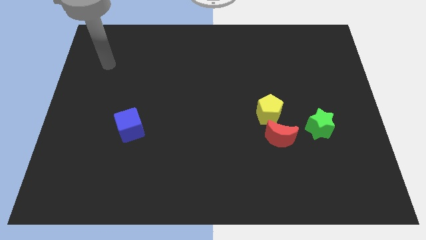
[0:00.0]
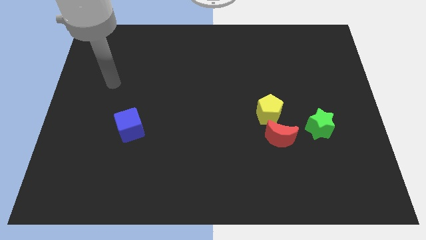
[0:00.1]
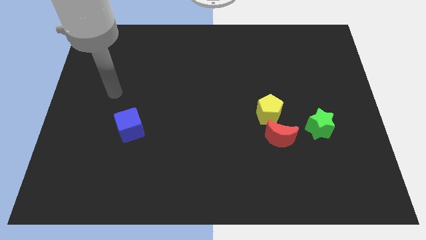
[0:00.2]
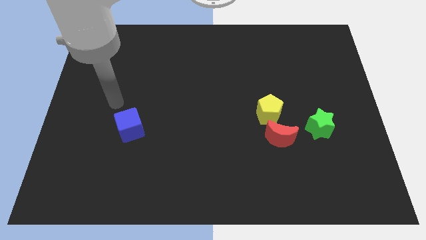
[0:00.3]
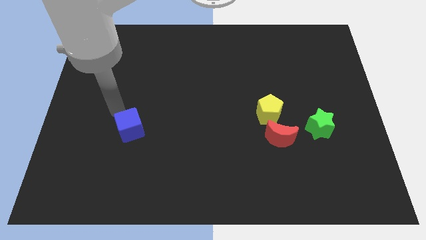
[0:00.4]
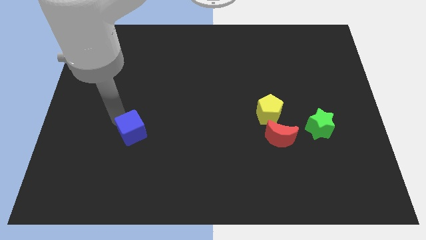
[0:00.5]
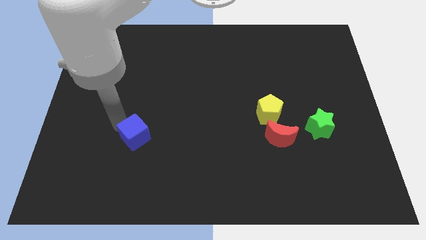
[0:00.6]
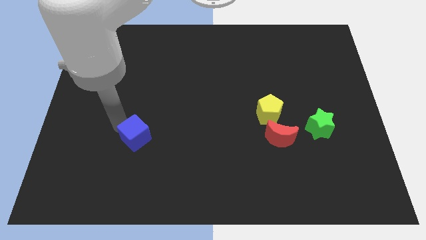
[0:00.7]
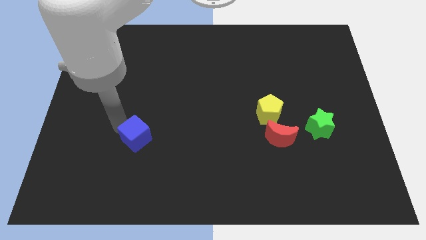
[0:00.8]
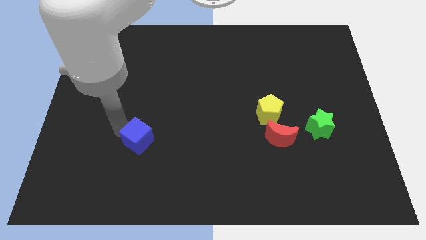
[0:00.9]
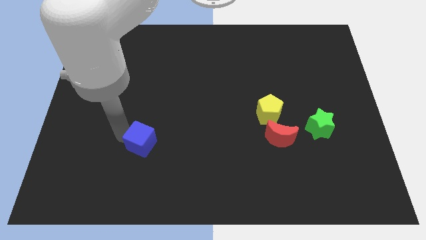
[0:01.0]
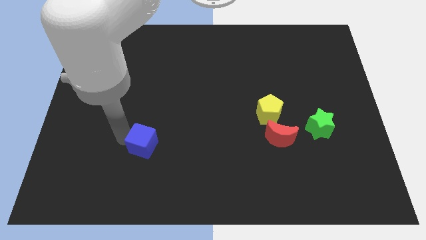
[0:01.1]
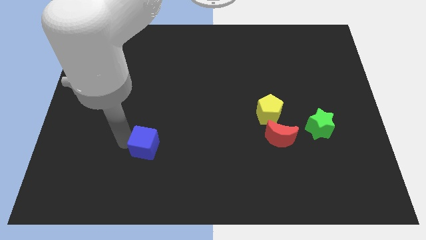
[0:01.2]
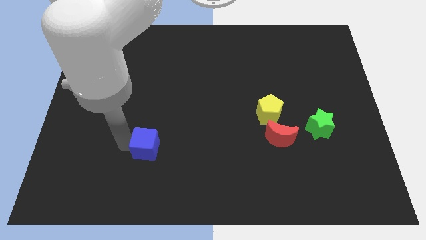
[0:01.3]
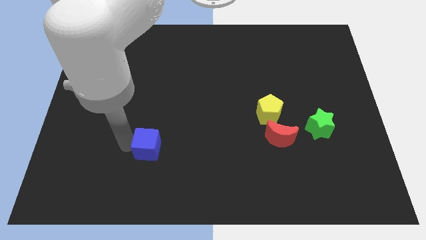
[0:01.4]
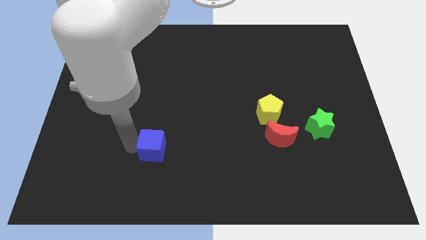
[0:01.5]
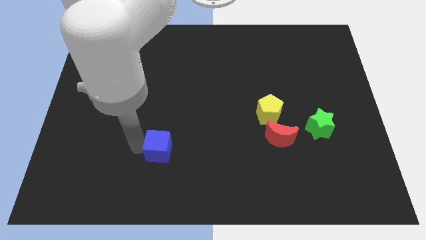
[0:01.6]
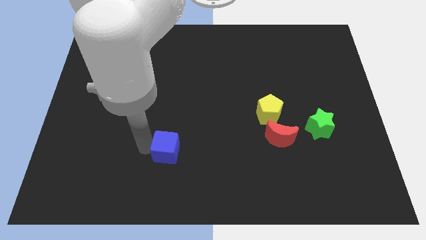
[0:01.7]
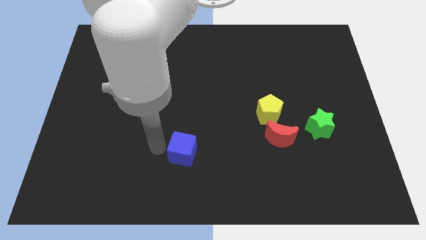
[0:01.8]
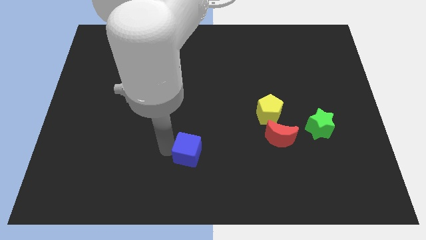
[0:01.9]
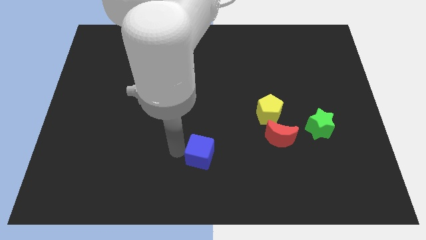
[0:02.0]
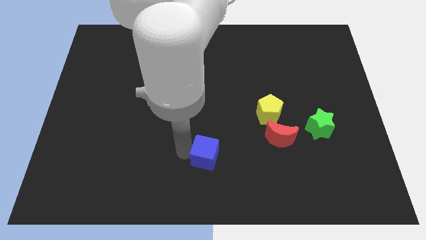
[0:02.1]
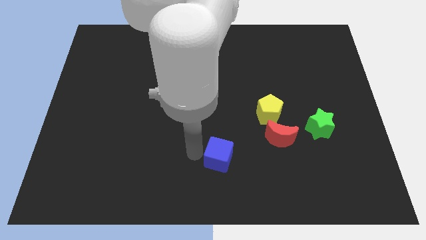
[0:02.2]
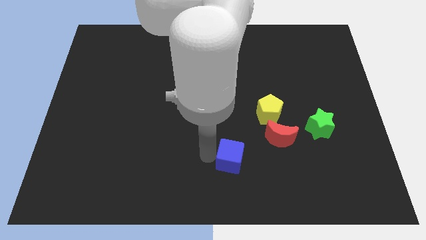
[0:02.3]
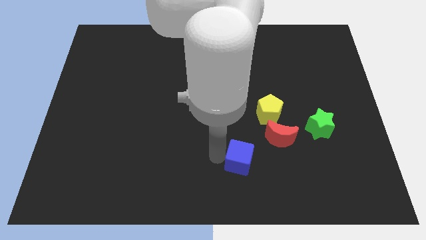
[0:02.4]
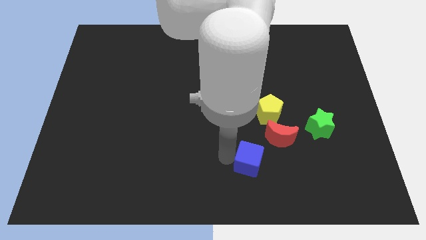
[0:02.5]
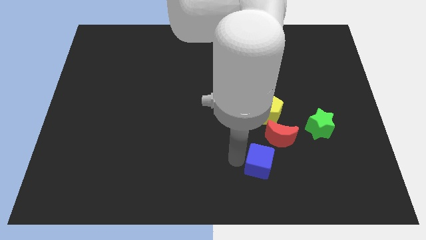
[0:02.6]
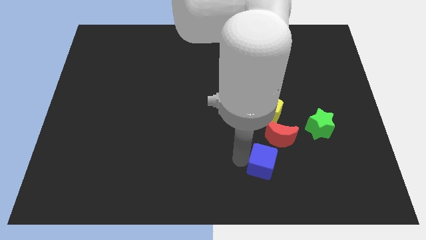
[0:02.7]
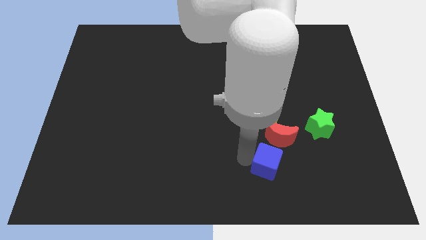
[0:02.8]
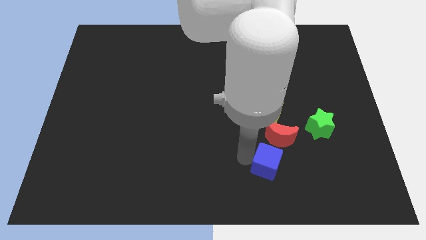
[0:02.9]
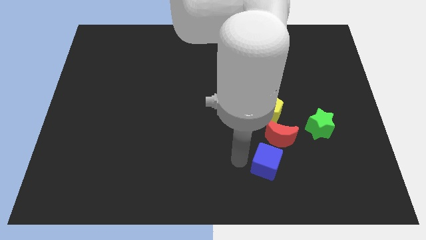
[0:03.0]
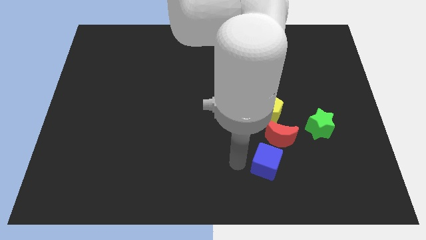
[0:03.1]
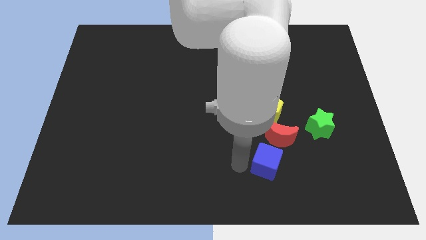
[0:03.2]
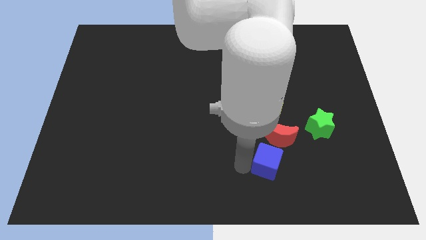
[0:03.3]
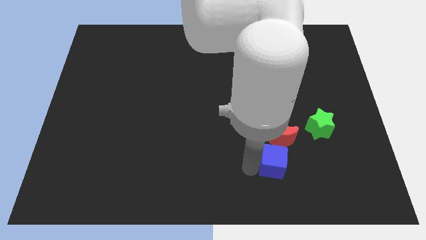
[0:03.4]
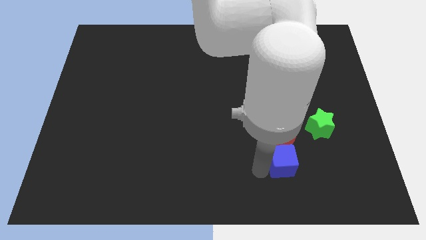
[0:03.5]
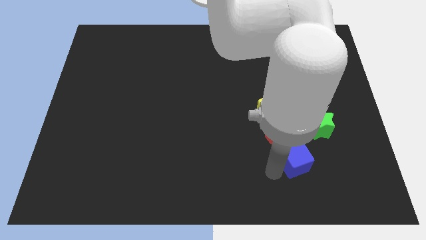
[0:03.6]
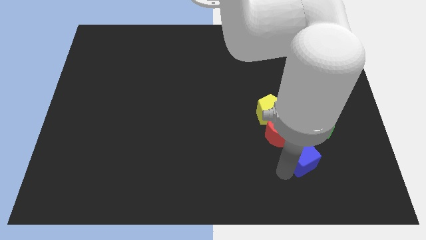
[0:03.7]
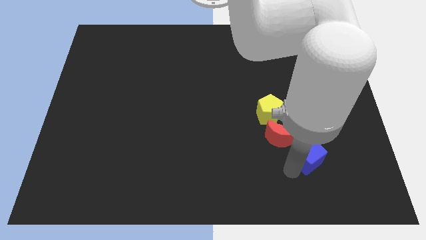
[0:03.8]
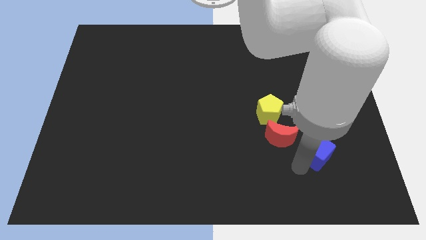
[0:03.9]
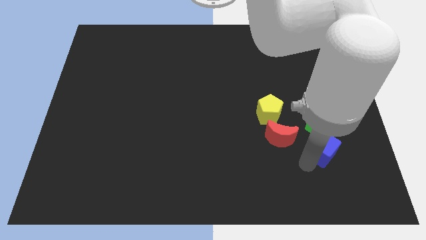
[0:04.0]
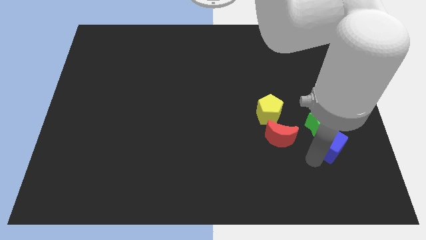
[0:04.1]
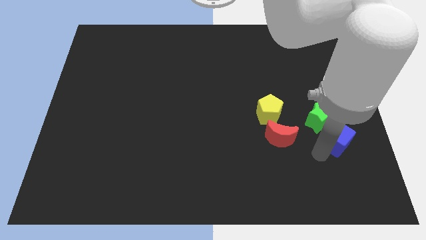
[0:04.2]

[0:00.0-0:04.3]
slide the cube to the star

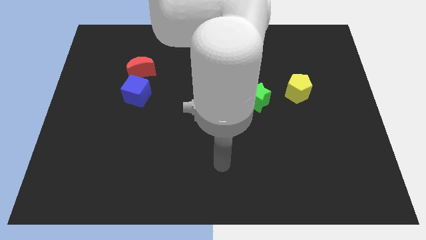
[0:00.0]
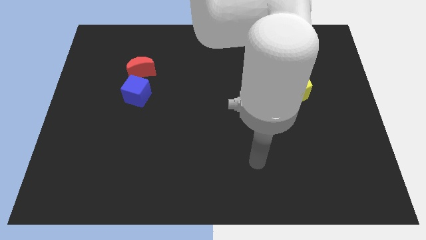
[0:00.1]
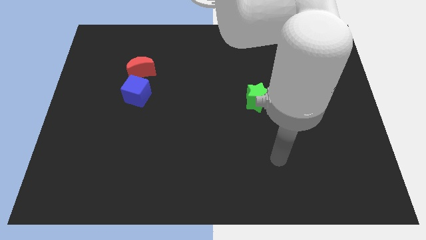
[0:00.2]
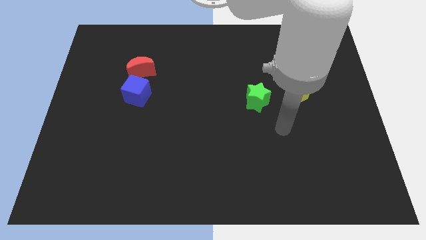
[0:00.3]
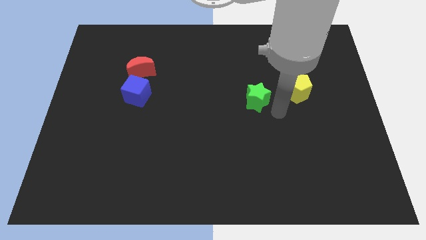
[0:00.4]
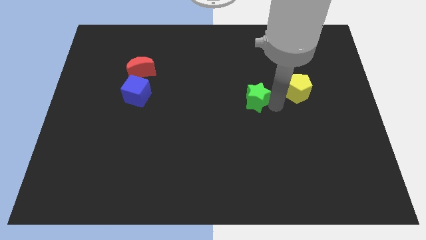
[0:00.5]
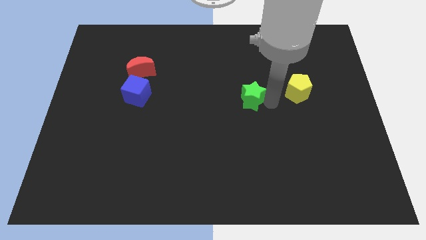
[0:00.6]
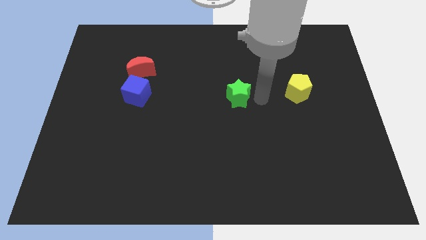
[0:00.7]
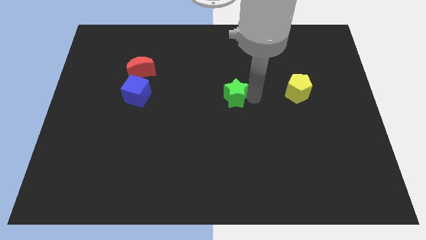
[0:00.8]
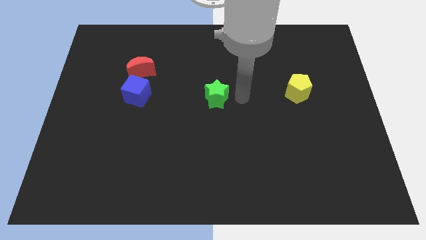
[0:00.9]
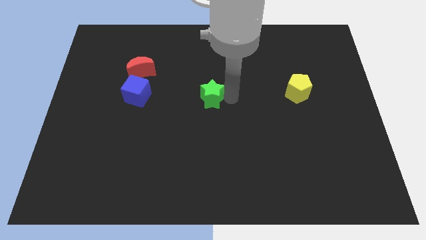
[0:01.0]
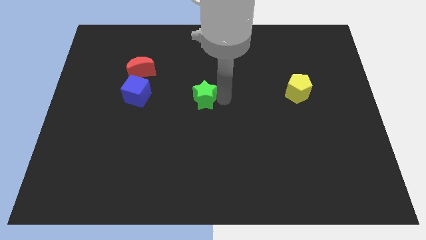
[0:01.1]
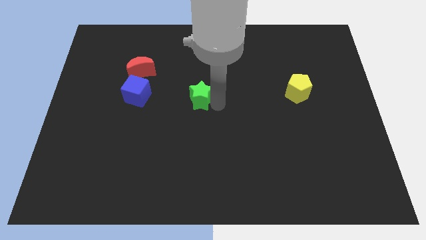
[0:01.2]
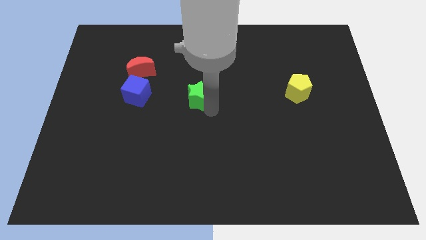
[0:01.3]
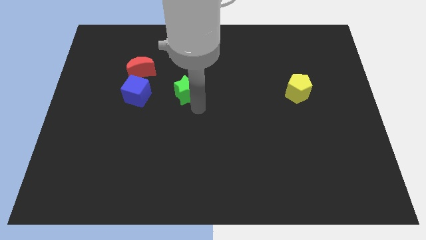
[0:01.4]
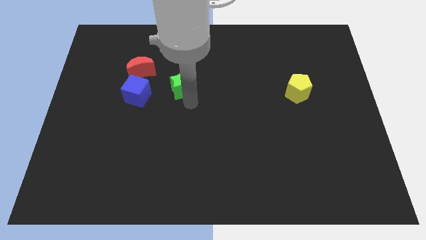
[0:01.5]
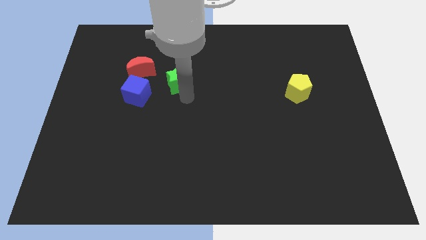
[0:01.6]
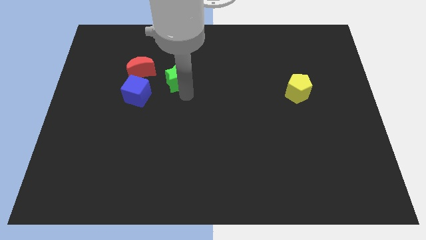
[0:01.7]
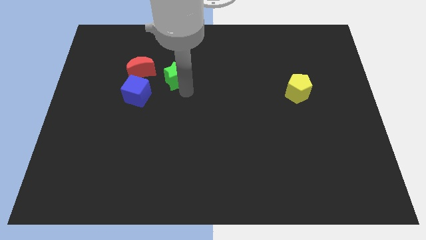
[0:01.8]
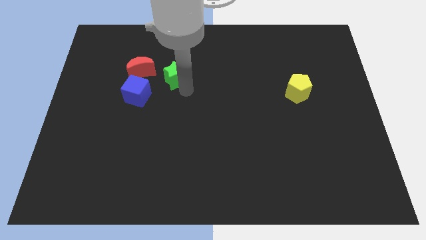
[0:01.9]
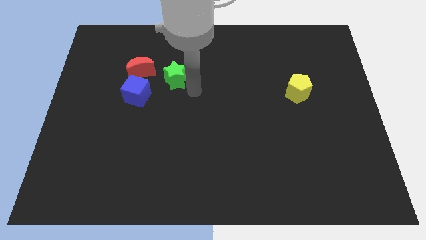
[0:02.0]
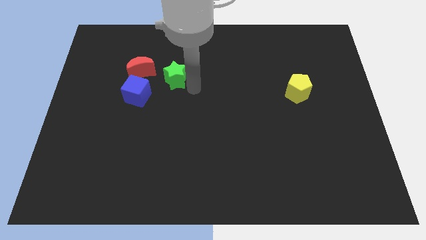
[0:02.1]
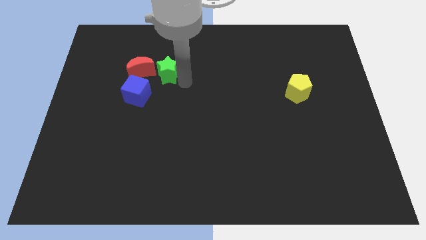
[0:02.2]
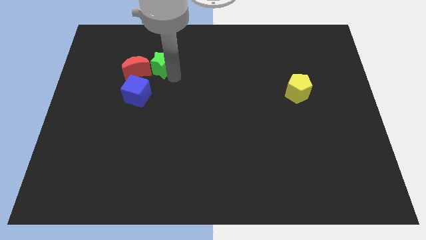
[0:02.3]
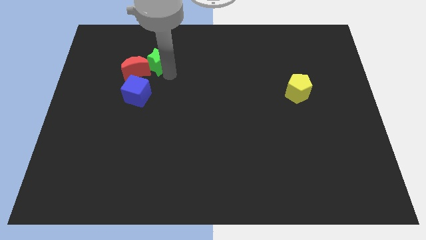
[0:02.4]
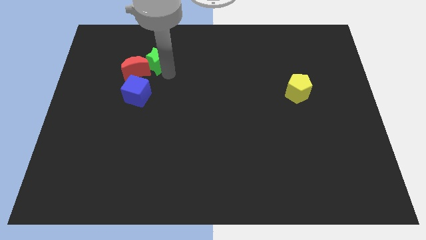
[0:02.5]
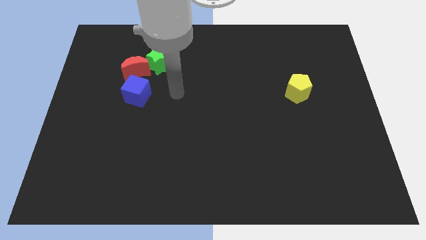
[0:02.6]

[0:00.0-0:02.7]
put the green block next to the moon

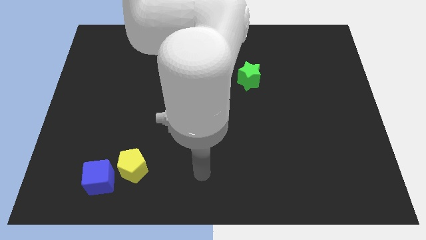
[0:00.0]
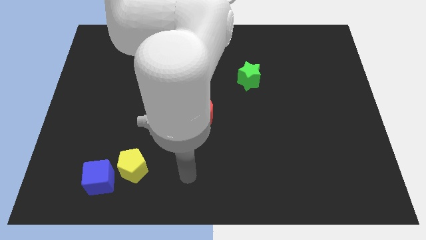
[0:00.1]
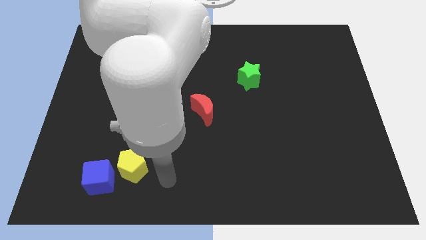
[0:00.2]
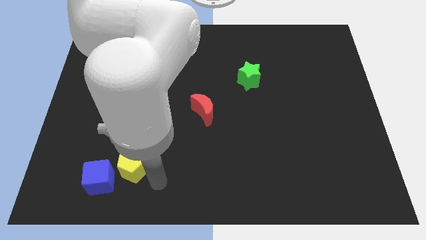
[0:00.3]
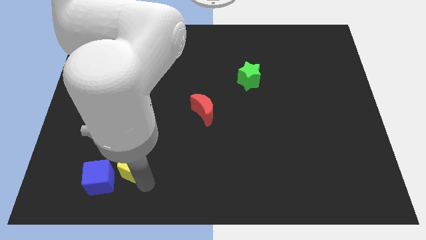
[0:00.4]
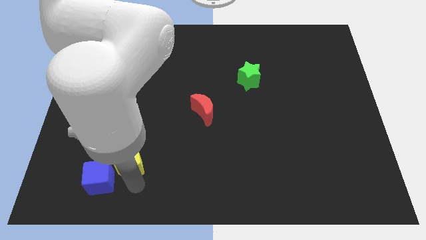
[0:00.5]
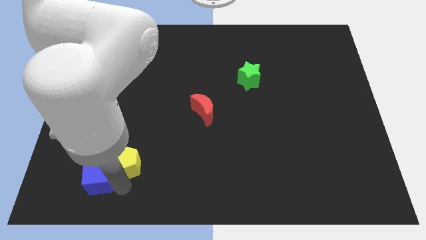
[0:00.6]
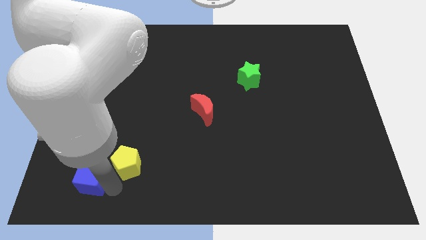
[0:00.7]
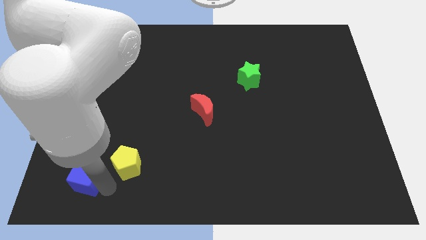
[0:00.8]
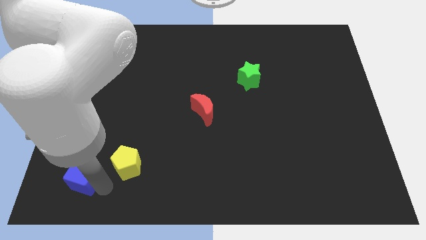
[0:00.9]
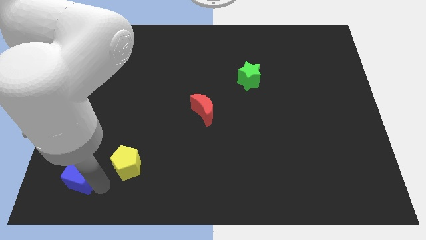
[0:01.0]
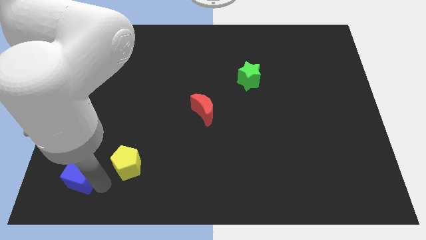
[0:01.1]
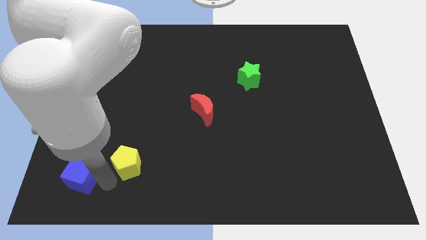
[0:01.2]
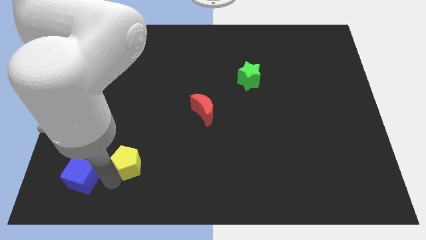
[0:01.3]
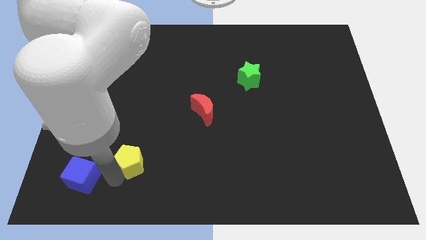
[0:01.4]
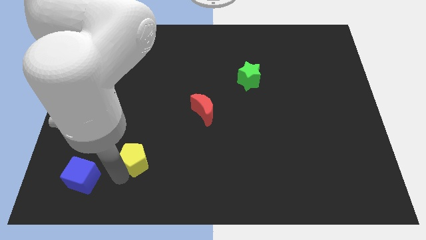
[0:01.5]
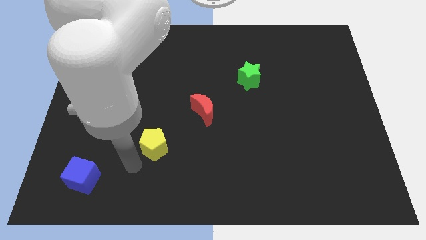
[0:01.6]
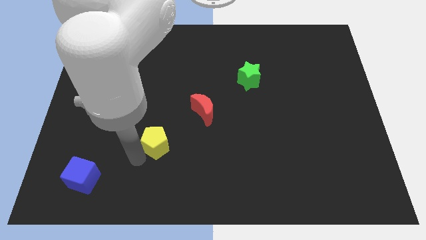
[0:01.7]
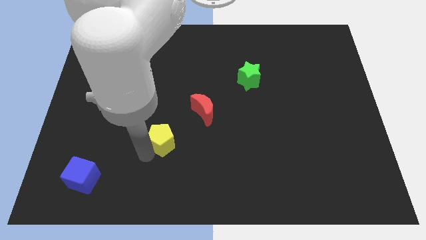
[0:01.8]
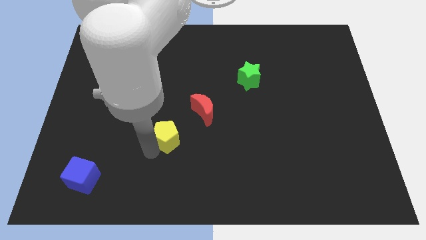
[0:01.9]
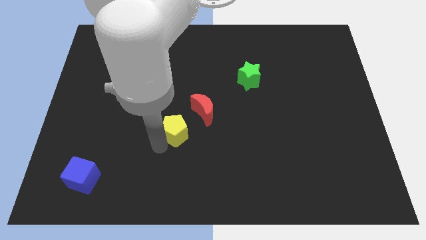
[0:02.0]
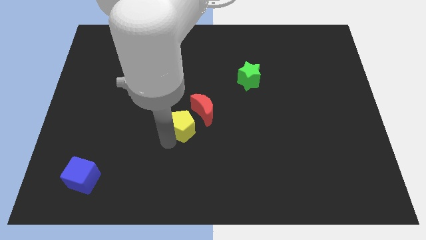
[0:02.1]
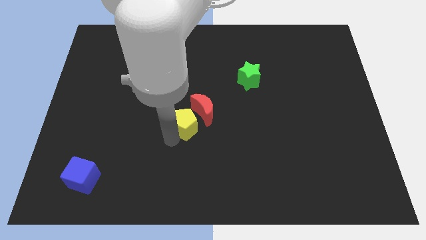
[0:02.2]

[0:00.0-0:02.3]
slide the yellow pentagon close to the moon
